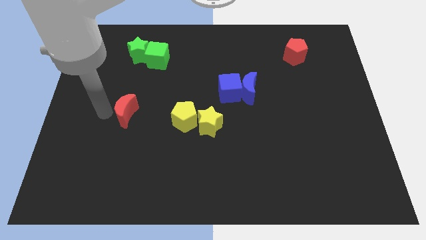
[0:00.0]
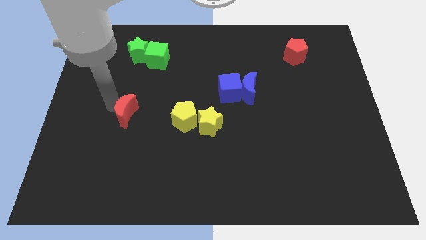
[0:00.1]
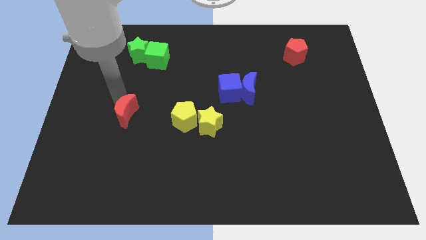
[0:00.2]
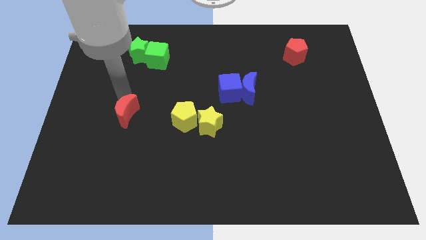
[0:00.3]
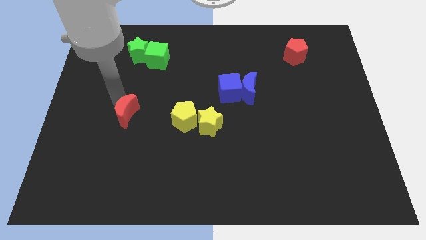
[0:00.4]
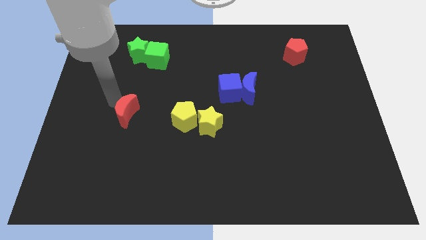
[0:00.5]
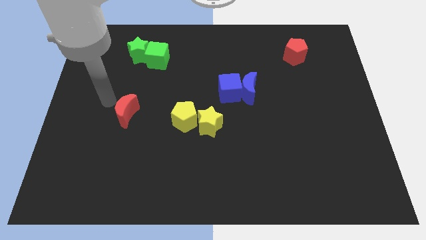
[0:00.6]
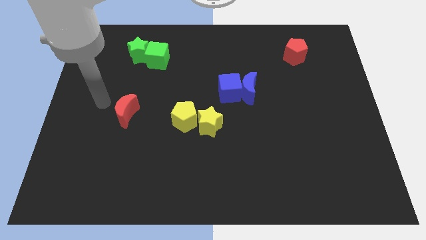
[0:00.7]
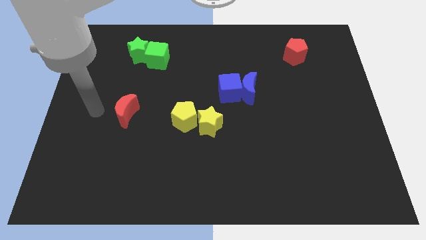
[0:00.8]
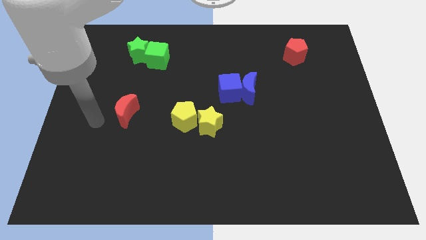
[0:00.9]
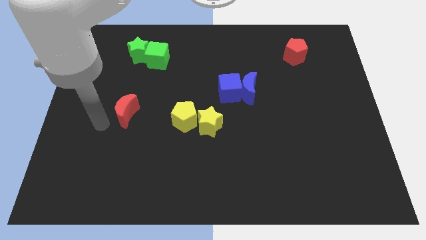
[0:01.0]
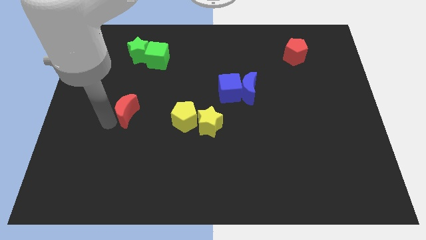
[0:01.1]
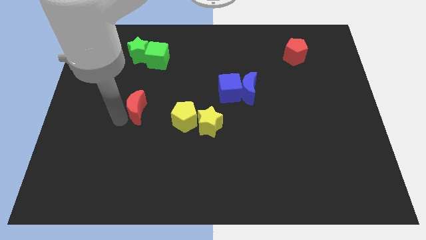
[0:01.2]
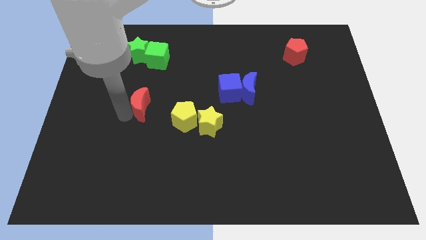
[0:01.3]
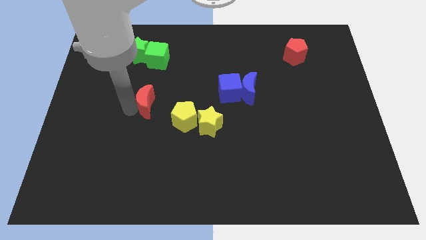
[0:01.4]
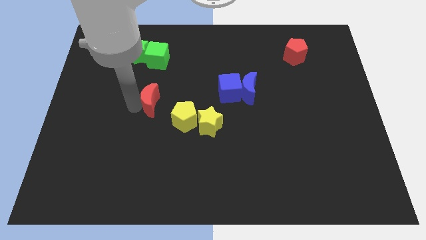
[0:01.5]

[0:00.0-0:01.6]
place the red moon below the green cube

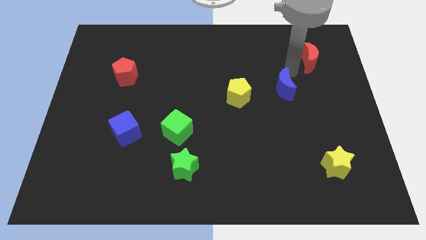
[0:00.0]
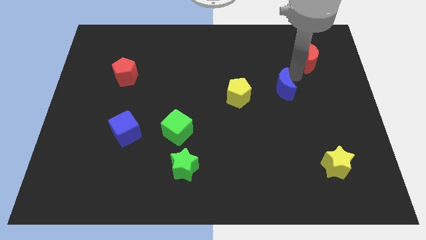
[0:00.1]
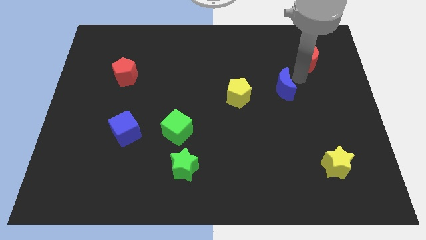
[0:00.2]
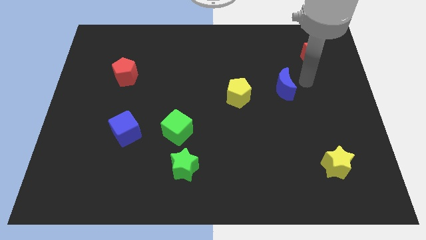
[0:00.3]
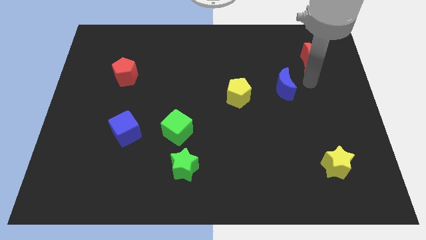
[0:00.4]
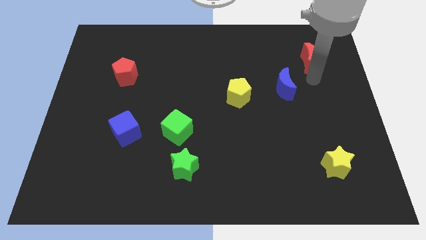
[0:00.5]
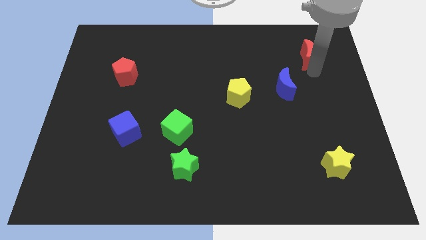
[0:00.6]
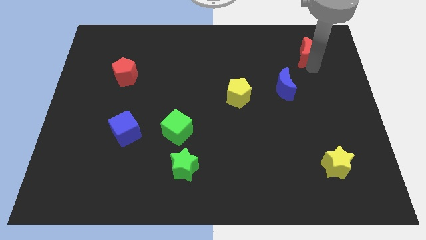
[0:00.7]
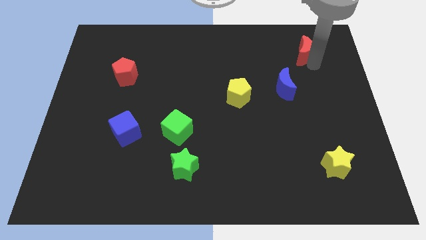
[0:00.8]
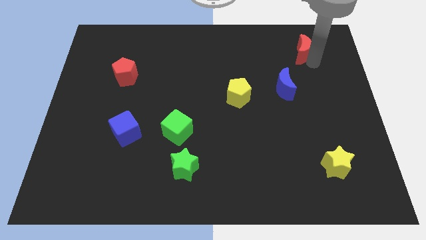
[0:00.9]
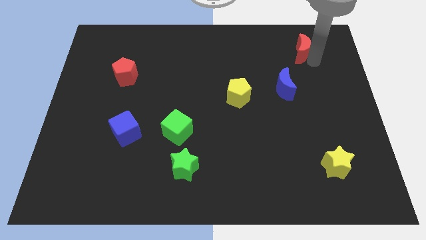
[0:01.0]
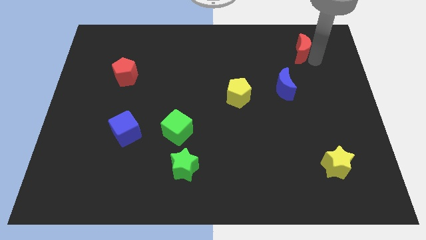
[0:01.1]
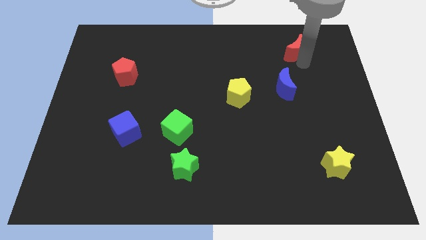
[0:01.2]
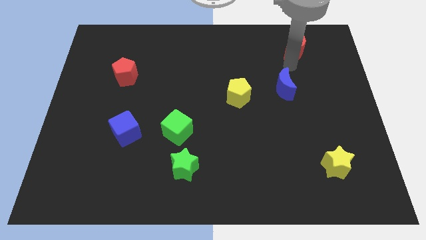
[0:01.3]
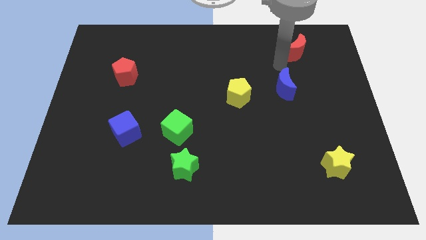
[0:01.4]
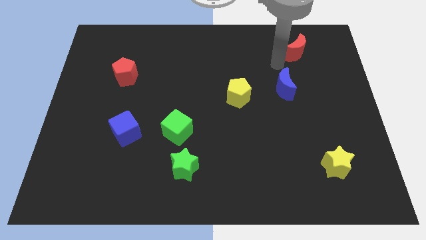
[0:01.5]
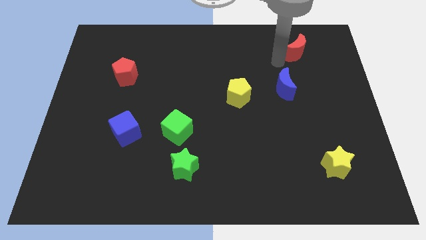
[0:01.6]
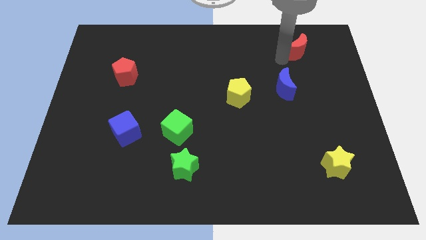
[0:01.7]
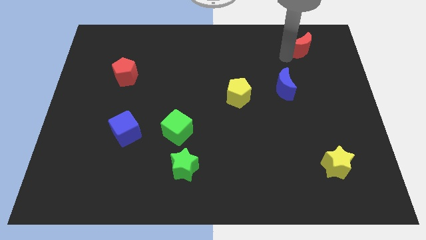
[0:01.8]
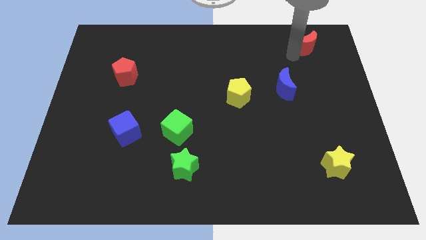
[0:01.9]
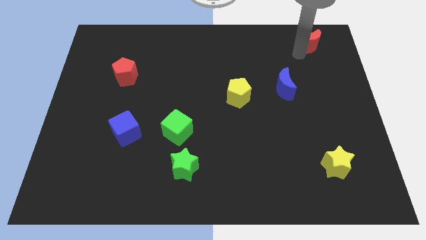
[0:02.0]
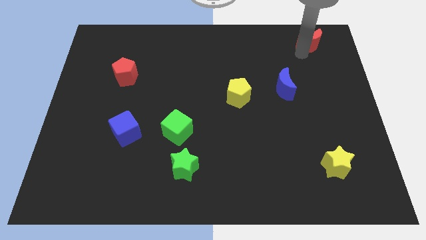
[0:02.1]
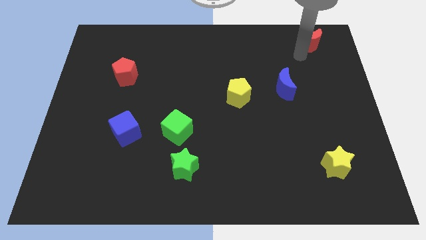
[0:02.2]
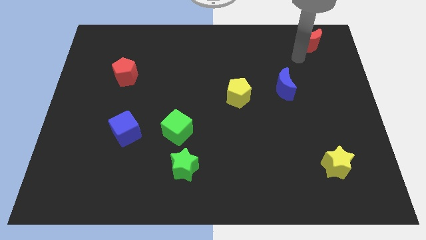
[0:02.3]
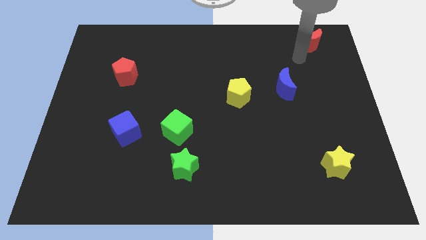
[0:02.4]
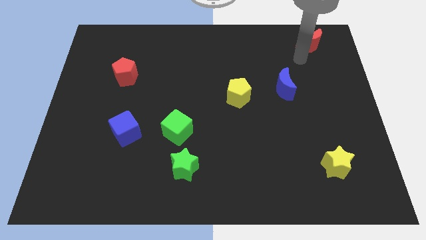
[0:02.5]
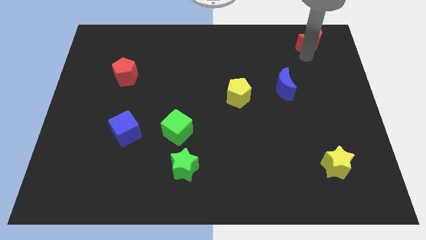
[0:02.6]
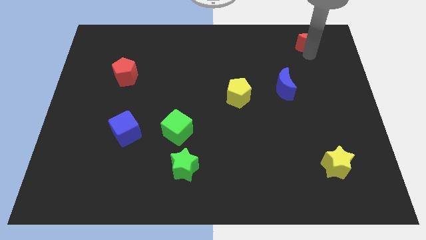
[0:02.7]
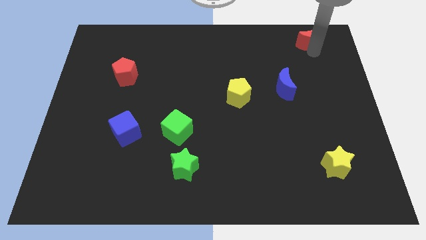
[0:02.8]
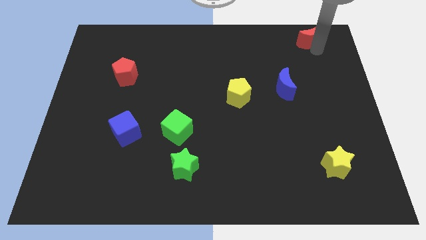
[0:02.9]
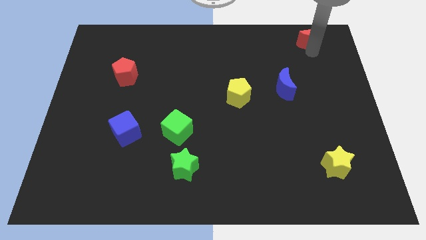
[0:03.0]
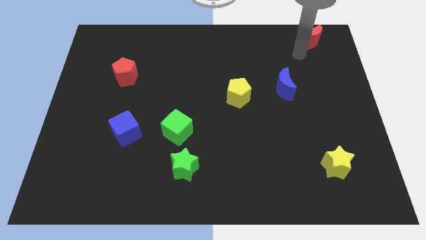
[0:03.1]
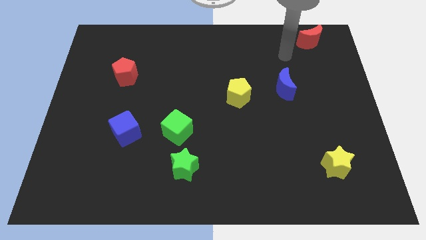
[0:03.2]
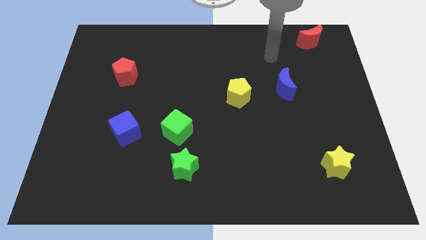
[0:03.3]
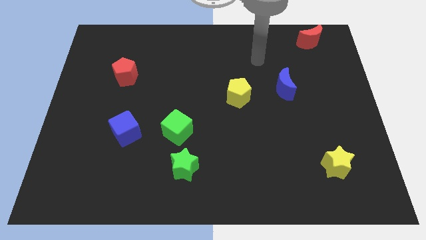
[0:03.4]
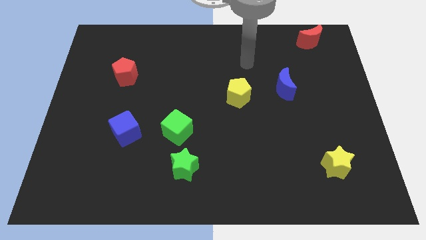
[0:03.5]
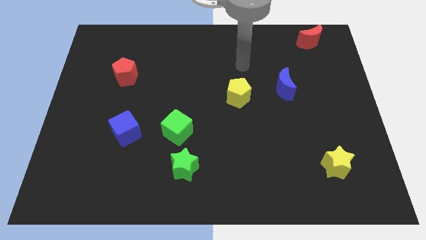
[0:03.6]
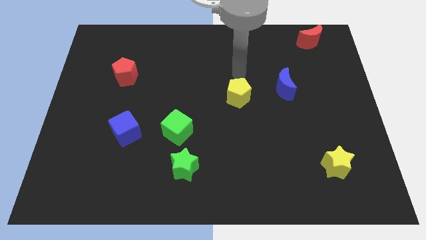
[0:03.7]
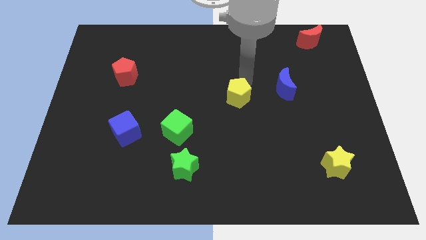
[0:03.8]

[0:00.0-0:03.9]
push the red crescent to the top right of the board

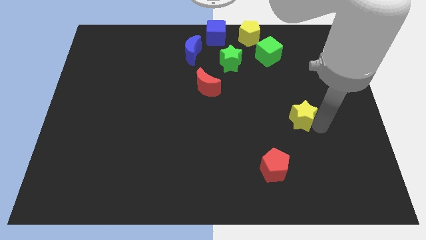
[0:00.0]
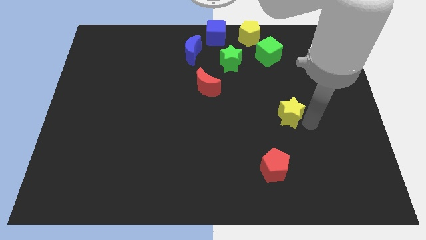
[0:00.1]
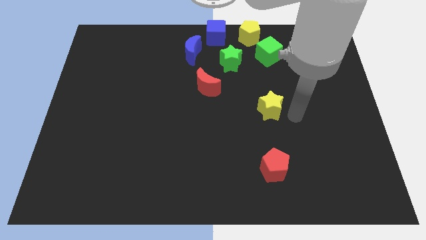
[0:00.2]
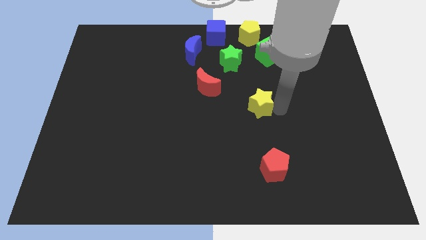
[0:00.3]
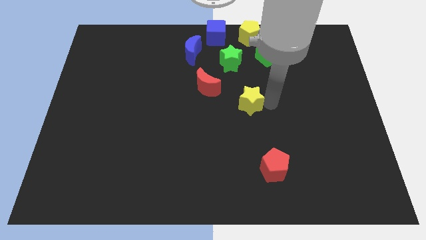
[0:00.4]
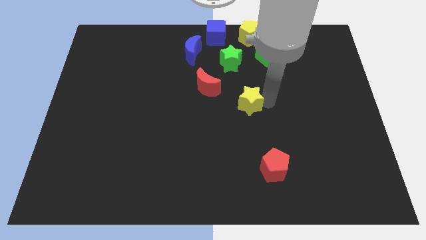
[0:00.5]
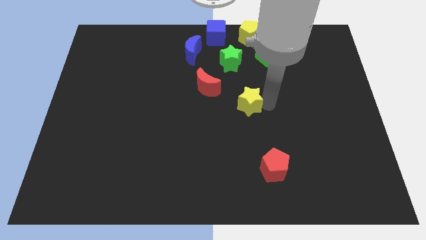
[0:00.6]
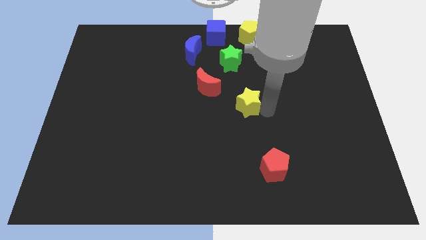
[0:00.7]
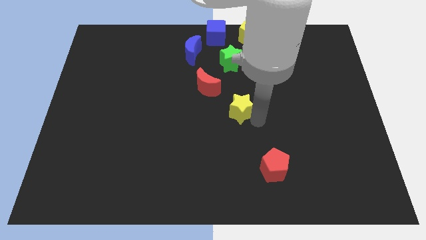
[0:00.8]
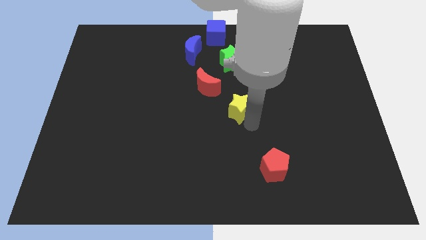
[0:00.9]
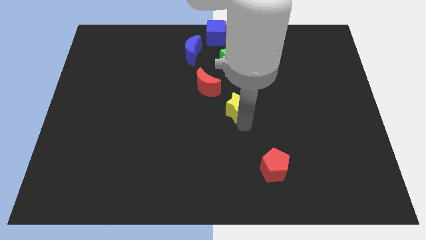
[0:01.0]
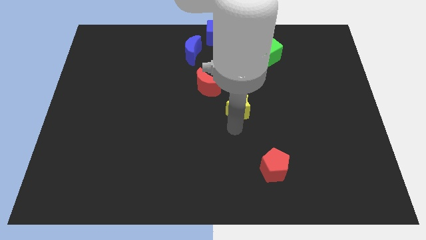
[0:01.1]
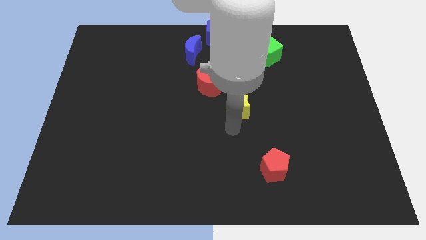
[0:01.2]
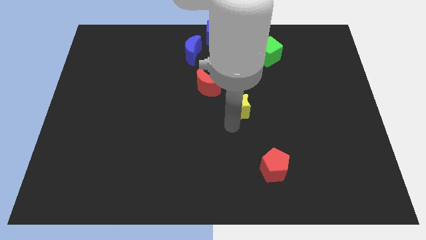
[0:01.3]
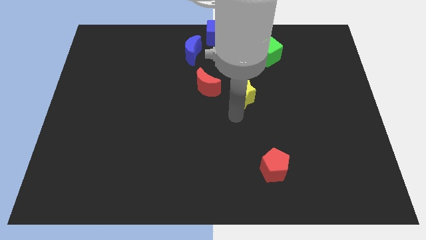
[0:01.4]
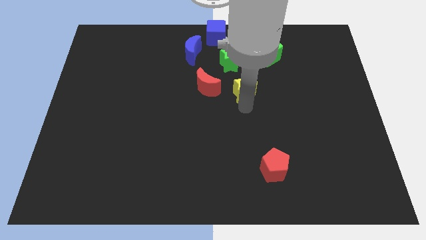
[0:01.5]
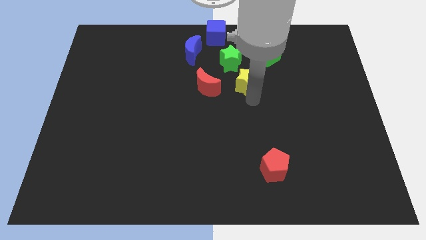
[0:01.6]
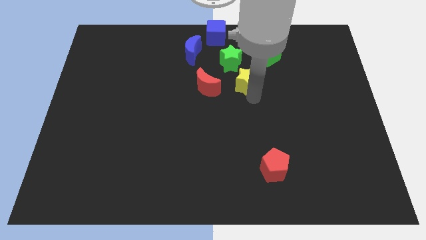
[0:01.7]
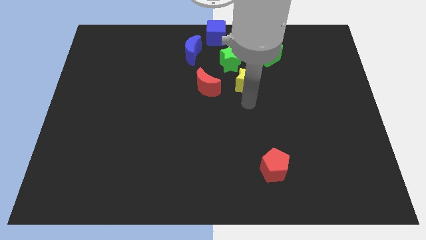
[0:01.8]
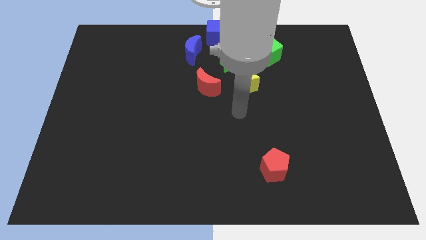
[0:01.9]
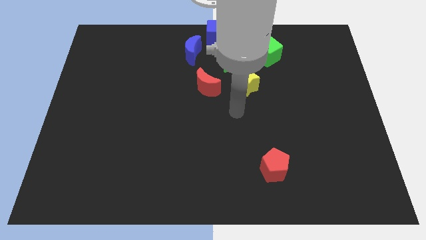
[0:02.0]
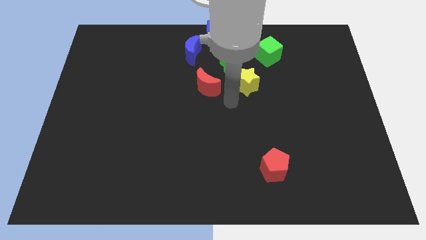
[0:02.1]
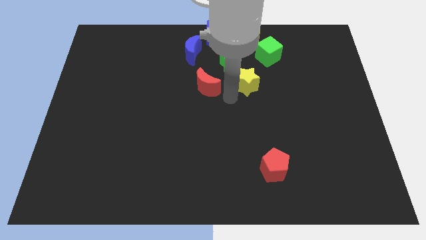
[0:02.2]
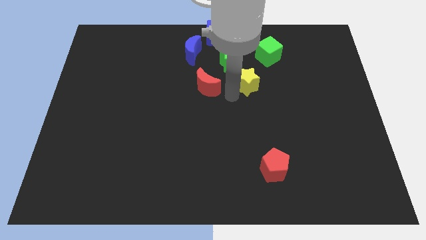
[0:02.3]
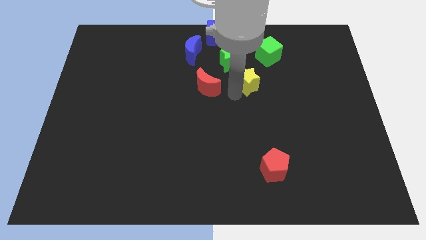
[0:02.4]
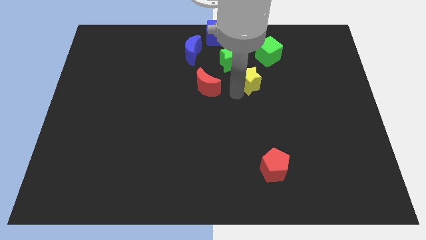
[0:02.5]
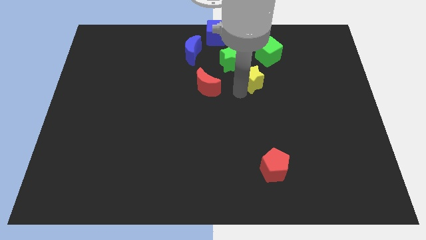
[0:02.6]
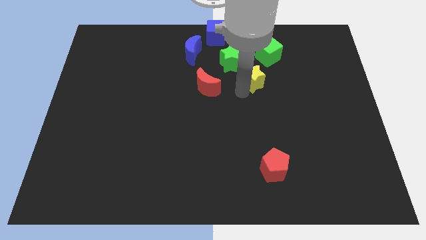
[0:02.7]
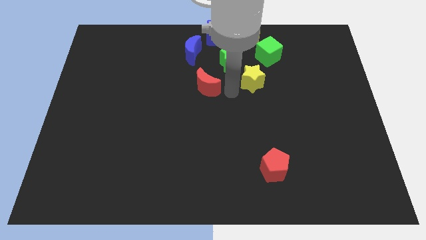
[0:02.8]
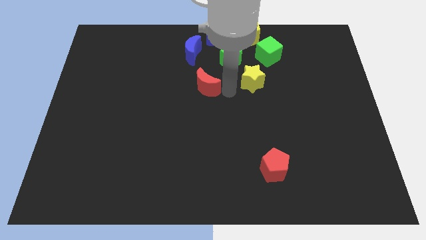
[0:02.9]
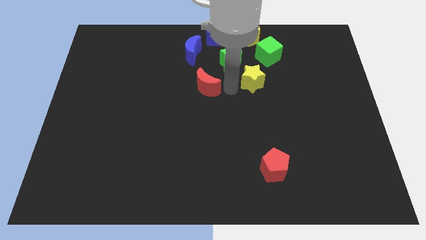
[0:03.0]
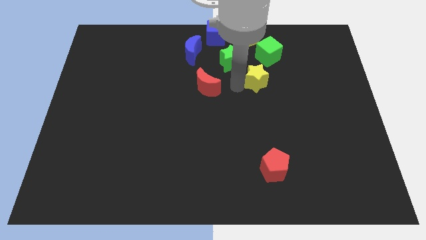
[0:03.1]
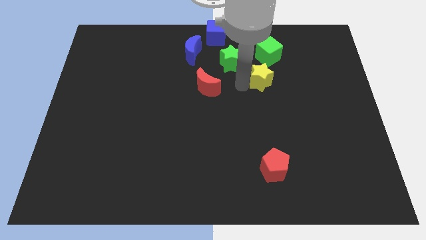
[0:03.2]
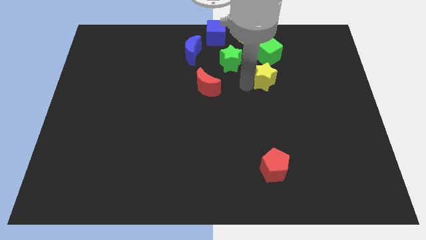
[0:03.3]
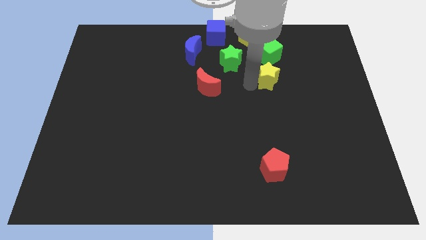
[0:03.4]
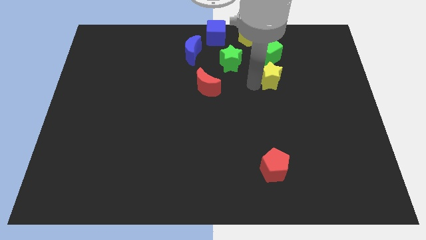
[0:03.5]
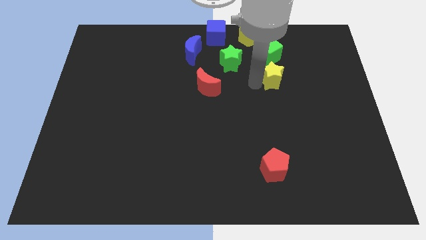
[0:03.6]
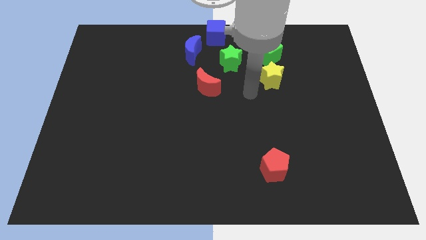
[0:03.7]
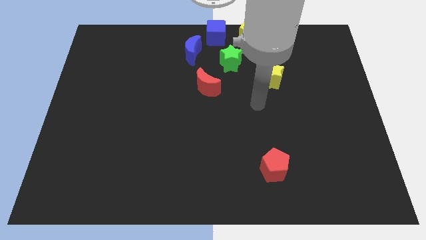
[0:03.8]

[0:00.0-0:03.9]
move the yellow star to the bottom of the green cube
